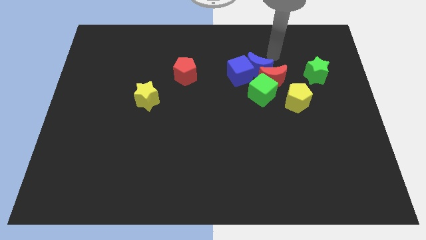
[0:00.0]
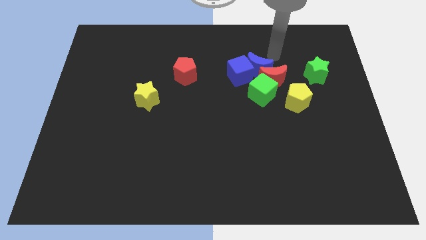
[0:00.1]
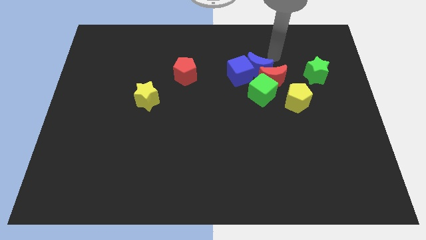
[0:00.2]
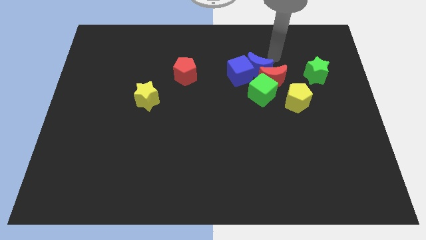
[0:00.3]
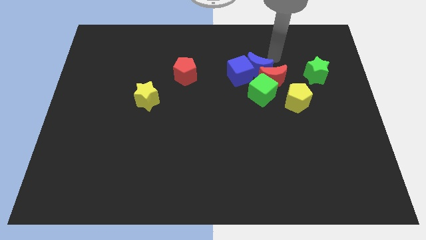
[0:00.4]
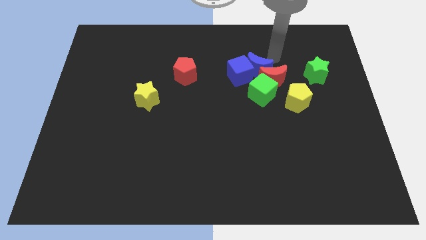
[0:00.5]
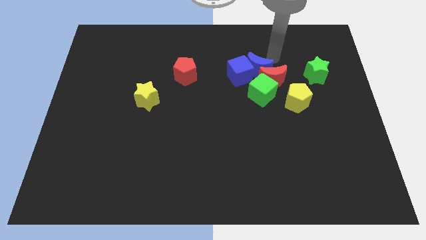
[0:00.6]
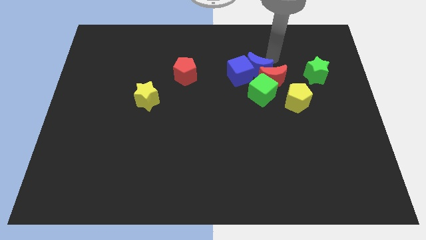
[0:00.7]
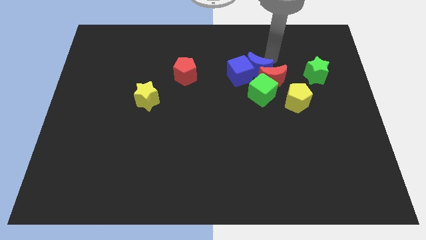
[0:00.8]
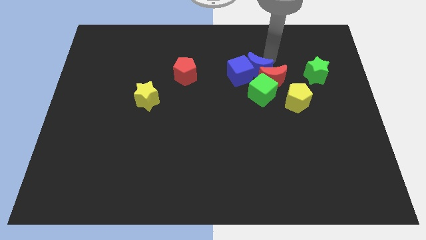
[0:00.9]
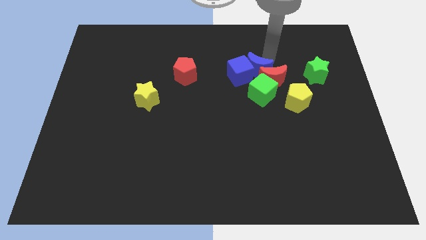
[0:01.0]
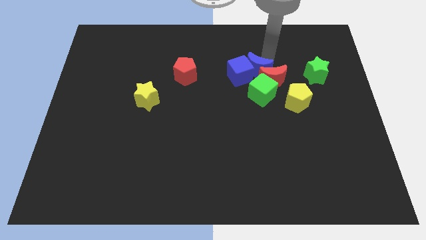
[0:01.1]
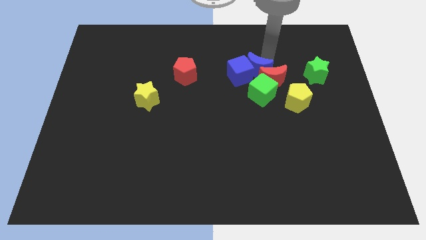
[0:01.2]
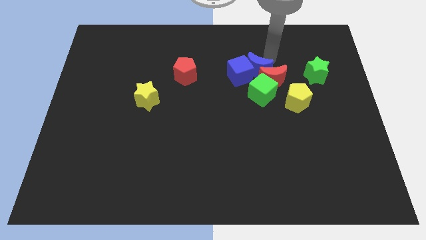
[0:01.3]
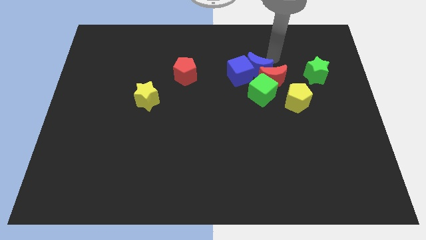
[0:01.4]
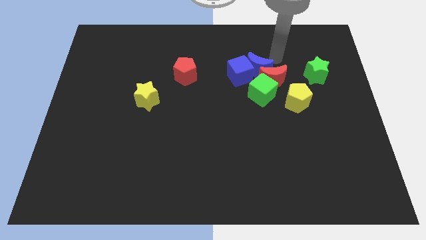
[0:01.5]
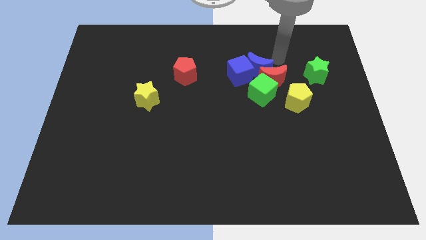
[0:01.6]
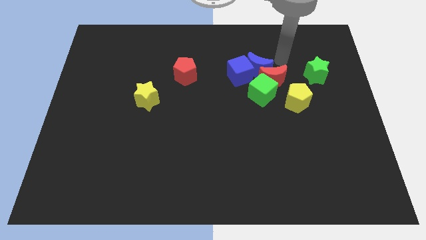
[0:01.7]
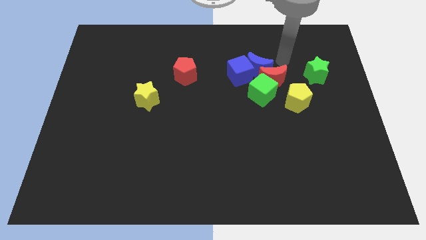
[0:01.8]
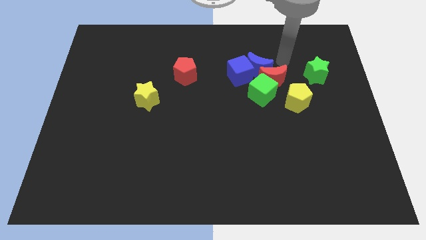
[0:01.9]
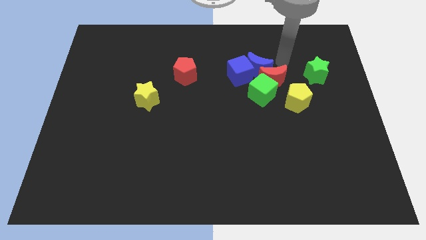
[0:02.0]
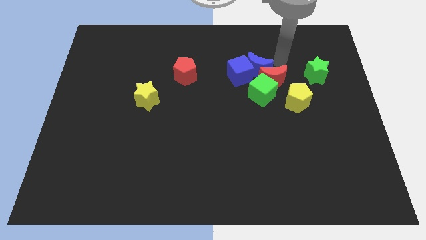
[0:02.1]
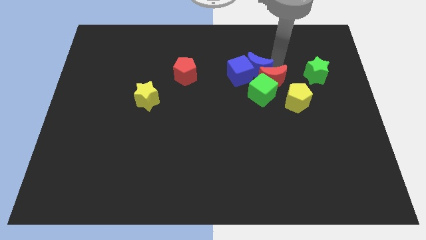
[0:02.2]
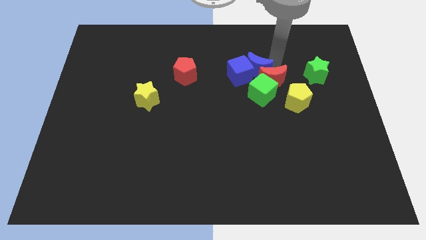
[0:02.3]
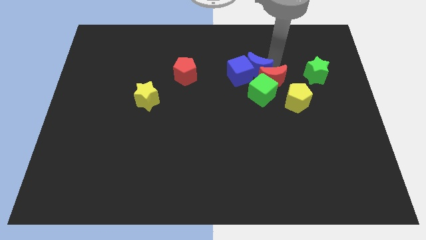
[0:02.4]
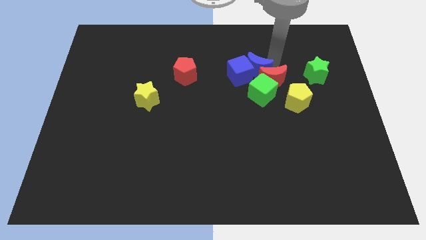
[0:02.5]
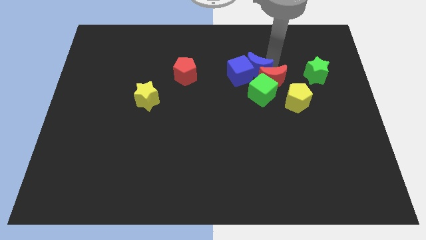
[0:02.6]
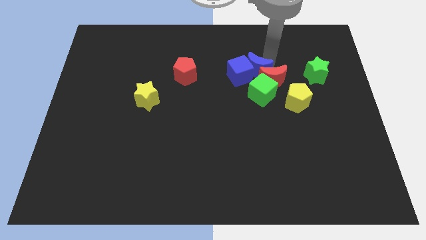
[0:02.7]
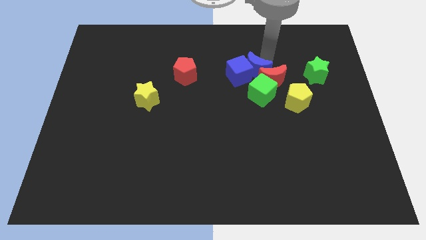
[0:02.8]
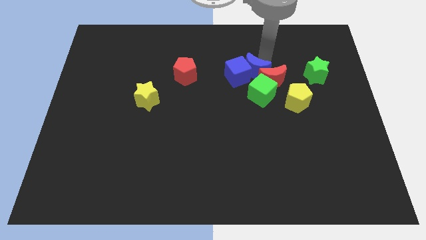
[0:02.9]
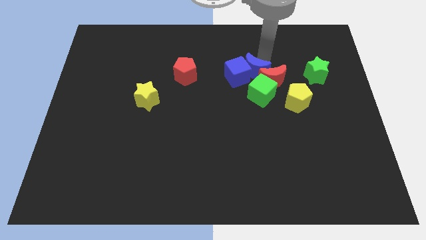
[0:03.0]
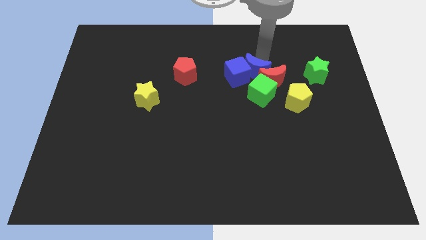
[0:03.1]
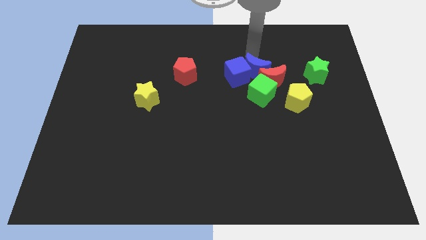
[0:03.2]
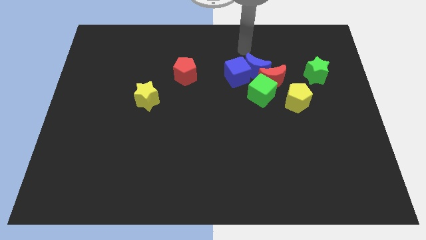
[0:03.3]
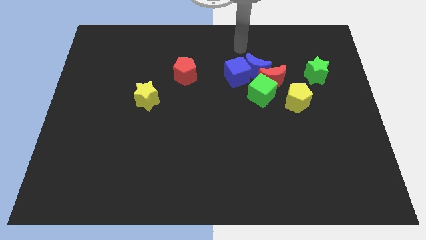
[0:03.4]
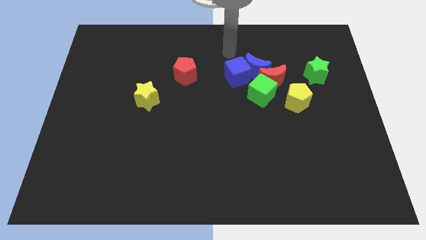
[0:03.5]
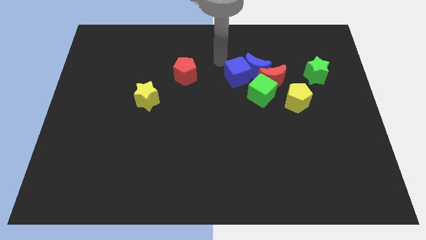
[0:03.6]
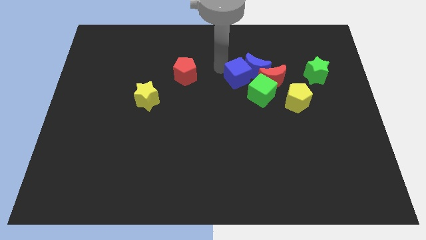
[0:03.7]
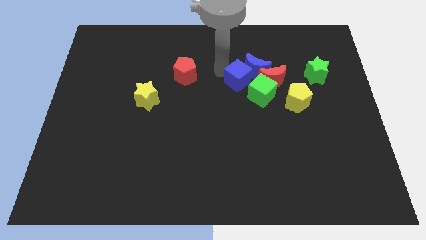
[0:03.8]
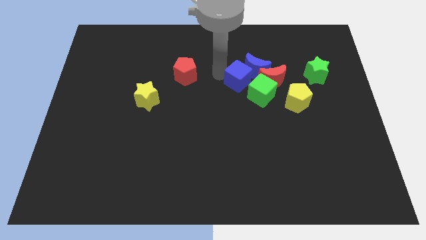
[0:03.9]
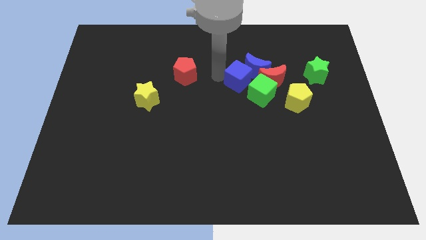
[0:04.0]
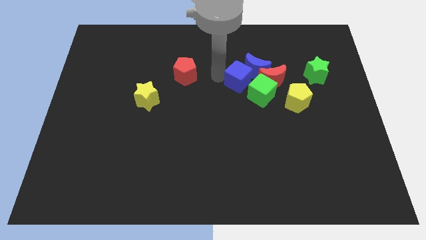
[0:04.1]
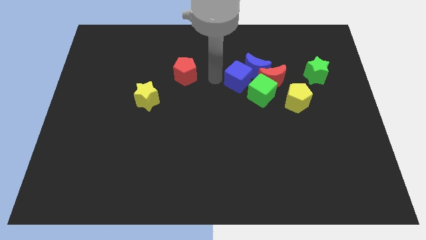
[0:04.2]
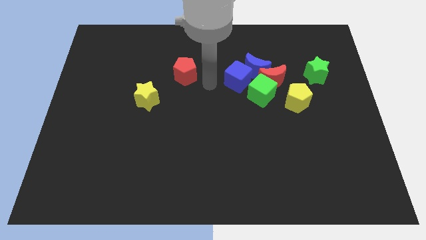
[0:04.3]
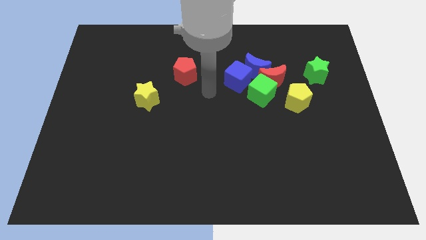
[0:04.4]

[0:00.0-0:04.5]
push the blue crescent into the blue cube

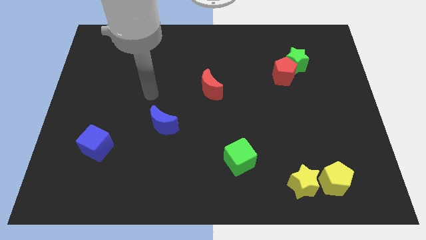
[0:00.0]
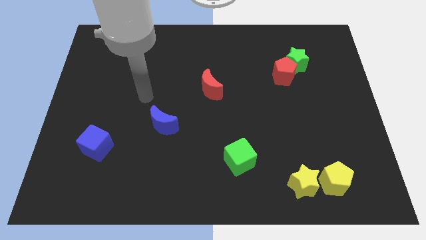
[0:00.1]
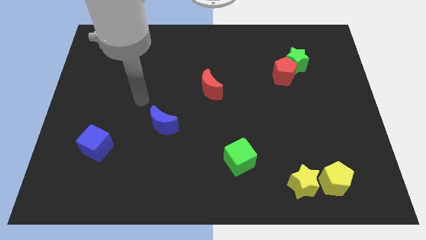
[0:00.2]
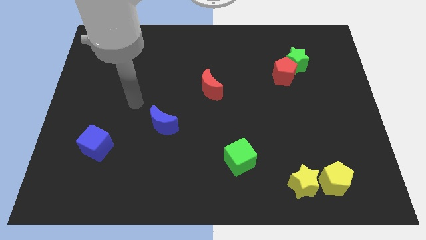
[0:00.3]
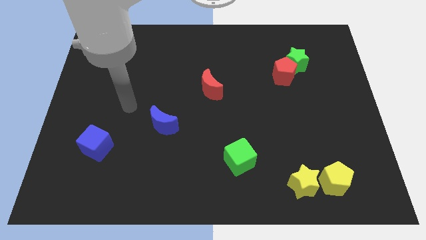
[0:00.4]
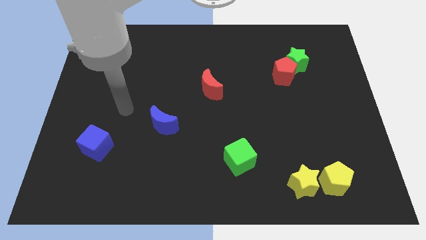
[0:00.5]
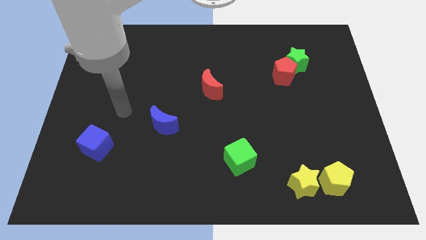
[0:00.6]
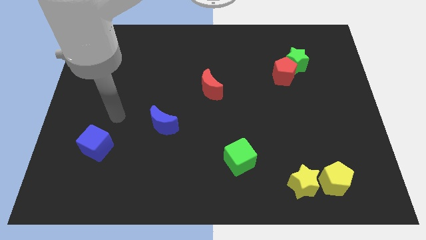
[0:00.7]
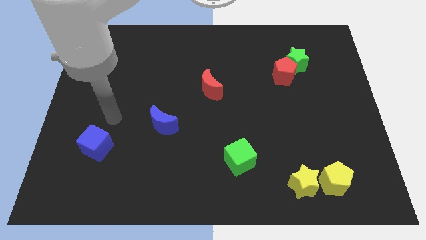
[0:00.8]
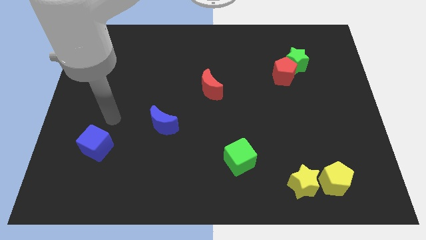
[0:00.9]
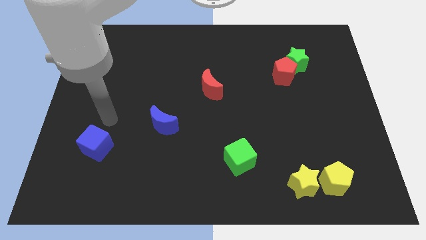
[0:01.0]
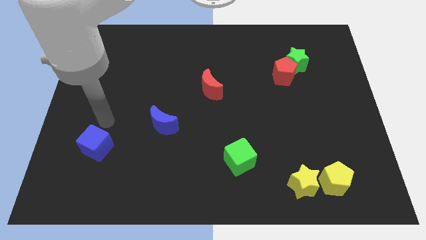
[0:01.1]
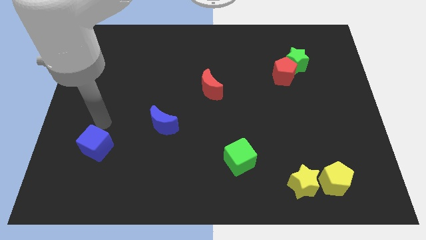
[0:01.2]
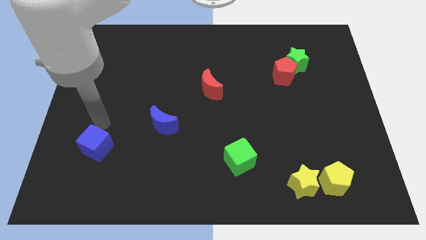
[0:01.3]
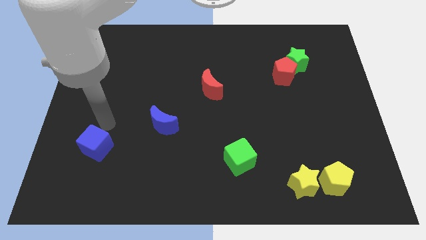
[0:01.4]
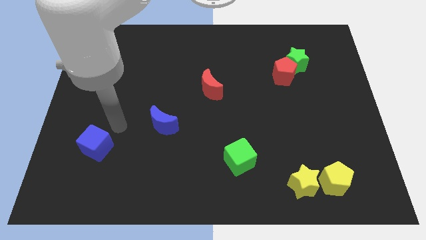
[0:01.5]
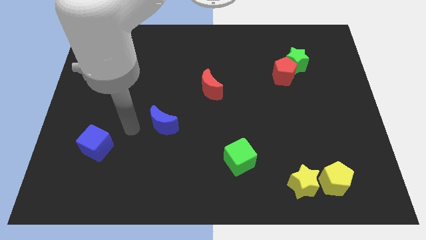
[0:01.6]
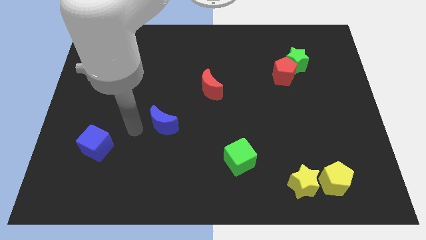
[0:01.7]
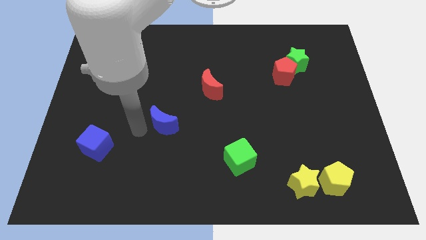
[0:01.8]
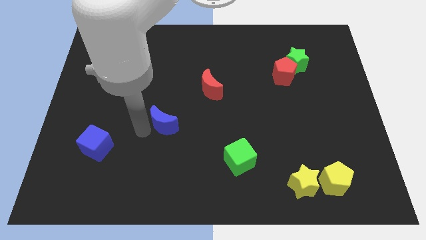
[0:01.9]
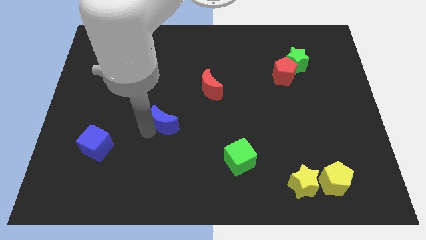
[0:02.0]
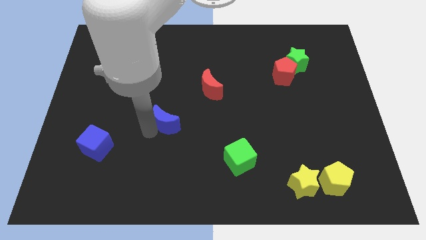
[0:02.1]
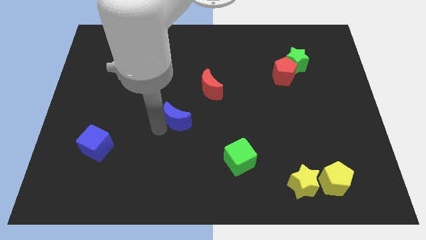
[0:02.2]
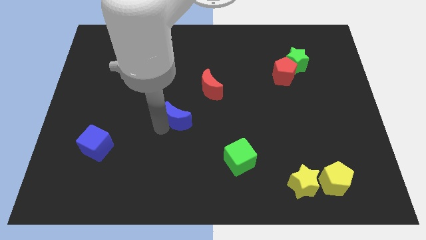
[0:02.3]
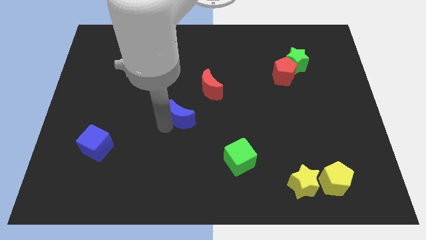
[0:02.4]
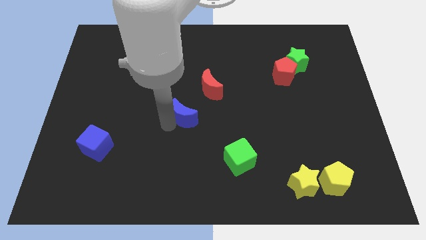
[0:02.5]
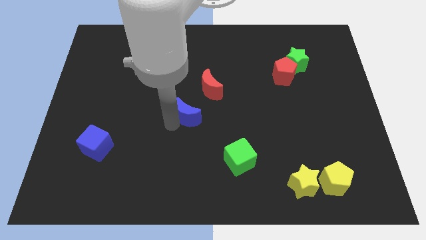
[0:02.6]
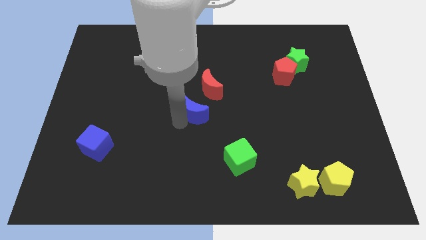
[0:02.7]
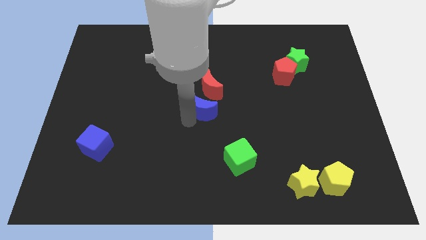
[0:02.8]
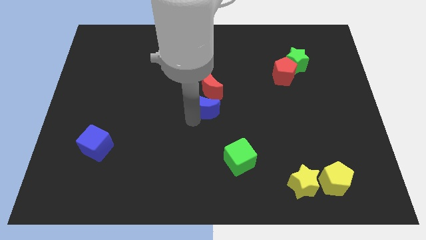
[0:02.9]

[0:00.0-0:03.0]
move the blue crescent down side of the red crescent

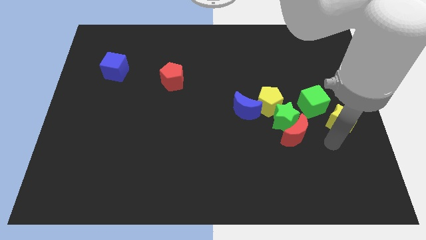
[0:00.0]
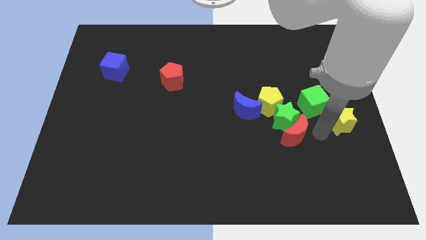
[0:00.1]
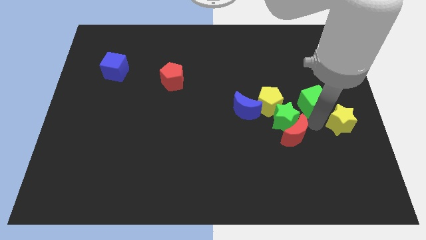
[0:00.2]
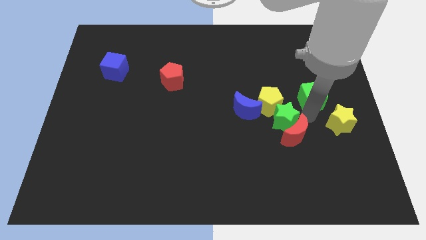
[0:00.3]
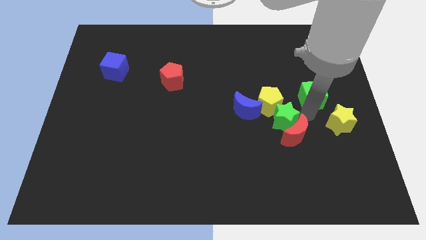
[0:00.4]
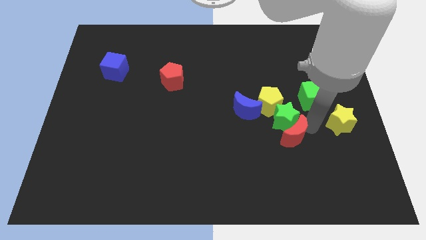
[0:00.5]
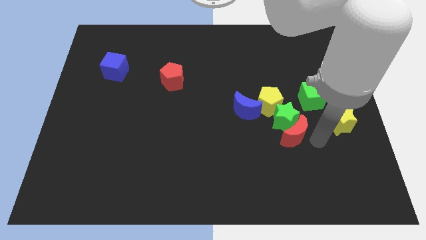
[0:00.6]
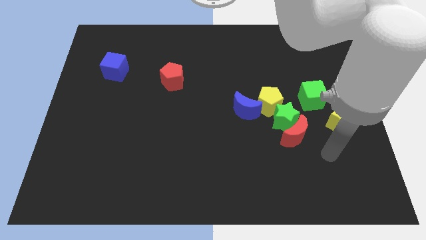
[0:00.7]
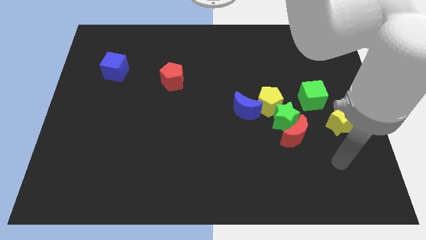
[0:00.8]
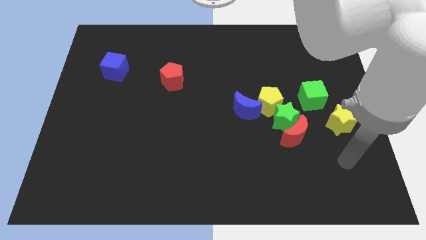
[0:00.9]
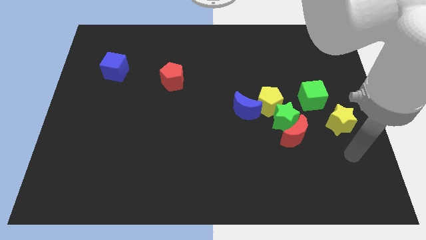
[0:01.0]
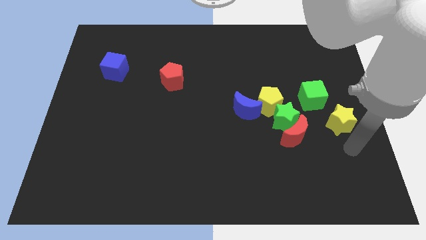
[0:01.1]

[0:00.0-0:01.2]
slightly move the green cube to the top side

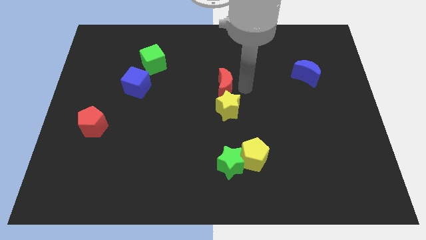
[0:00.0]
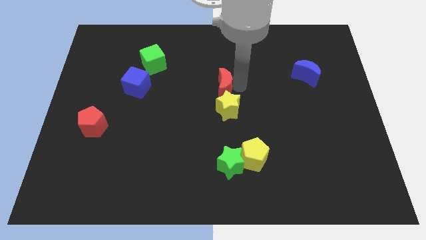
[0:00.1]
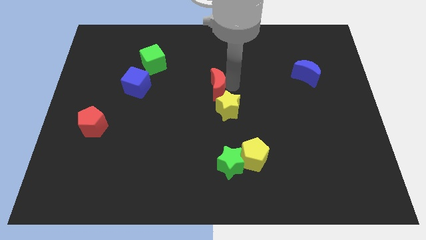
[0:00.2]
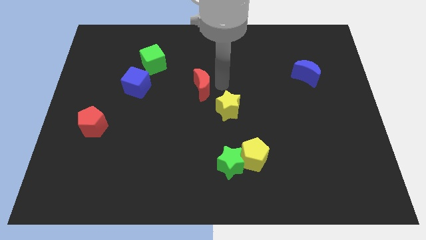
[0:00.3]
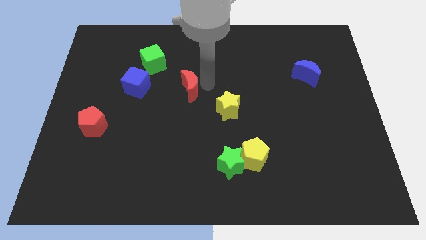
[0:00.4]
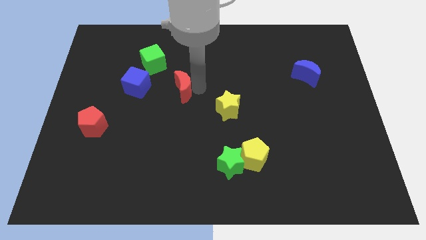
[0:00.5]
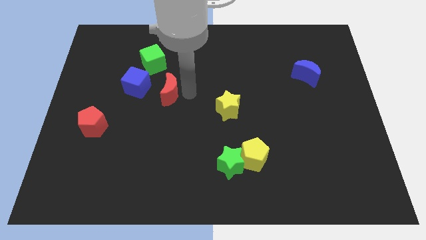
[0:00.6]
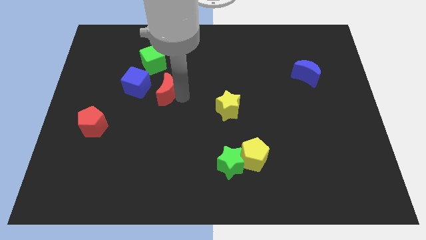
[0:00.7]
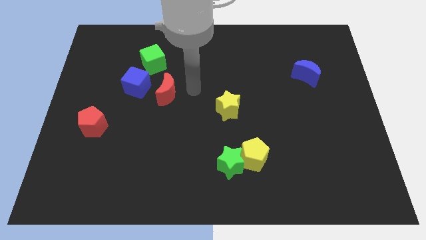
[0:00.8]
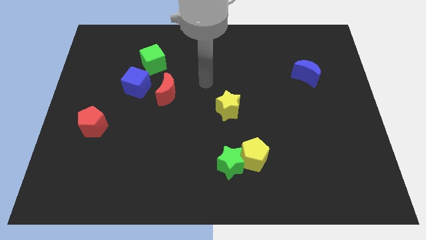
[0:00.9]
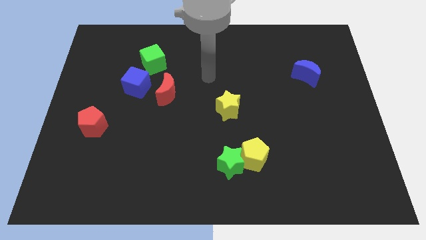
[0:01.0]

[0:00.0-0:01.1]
push the red crescent to the left of the blue cube
